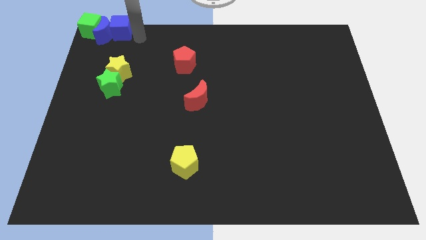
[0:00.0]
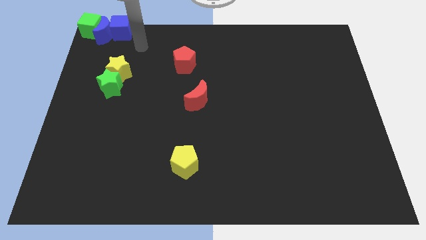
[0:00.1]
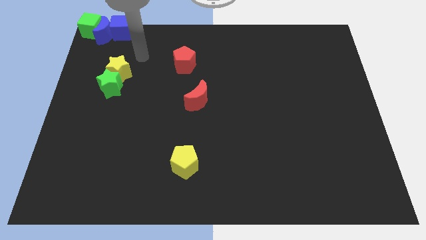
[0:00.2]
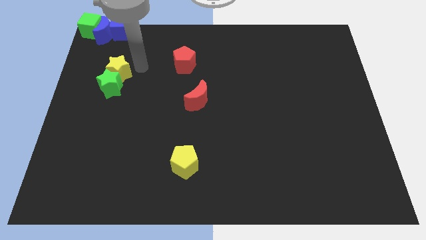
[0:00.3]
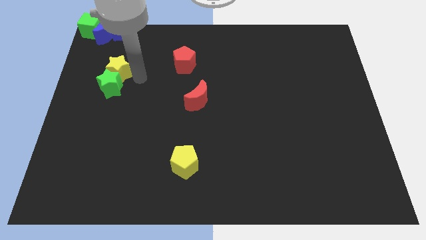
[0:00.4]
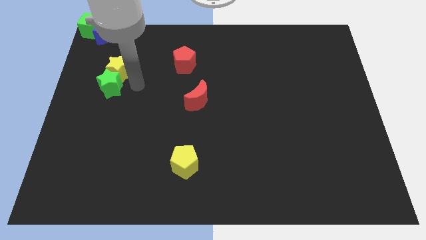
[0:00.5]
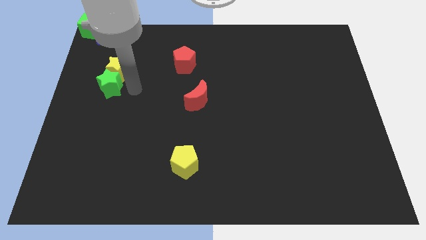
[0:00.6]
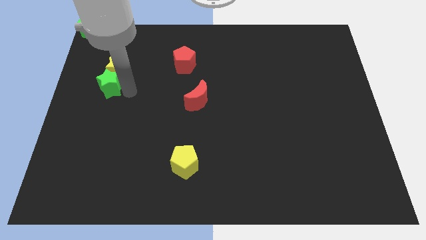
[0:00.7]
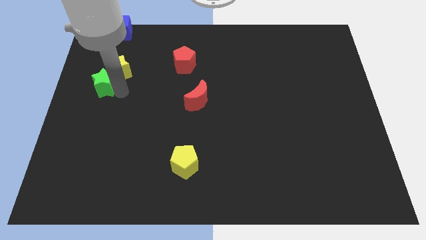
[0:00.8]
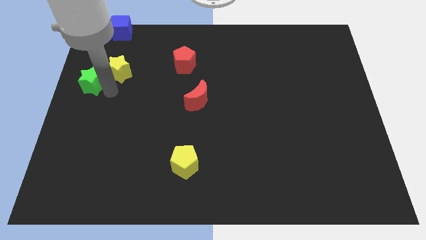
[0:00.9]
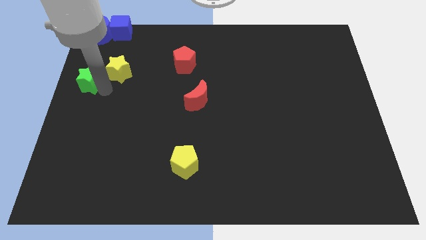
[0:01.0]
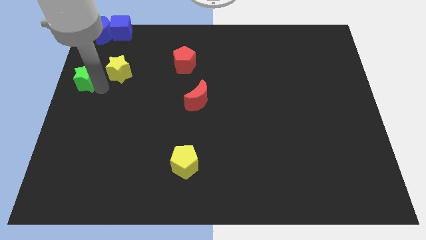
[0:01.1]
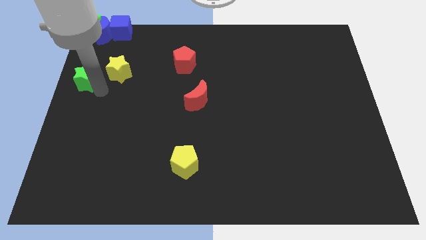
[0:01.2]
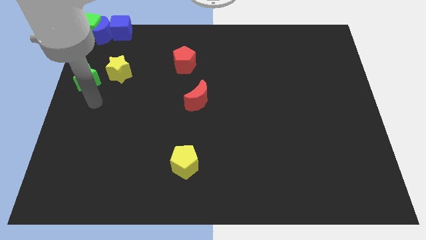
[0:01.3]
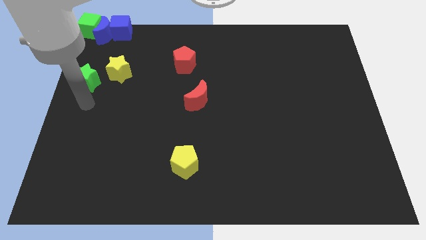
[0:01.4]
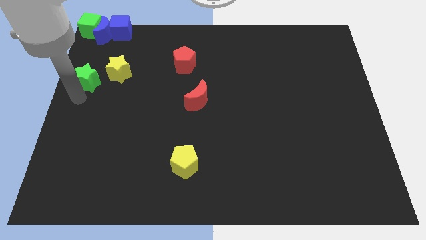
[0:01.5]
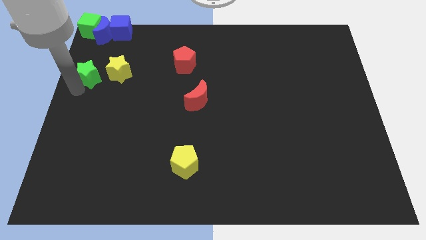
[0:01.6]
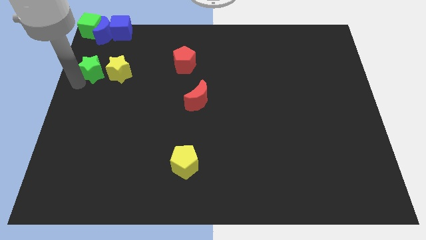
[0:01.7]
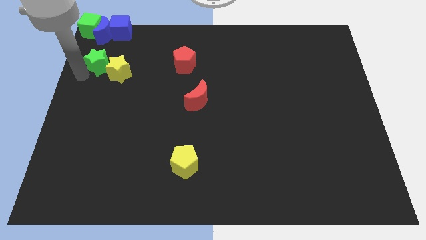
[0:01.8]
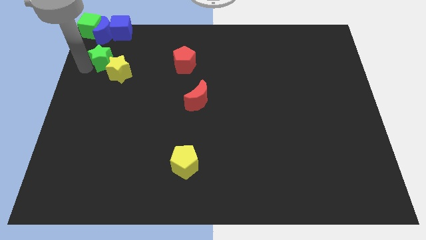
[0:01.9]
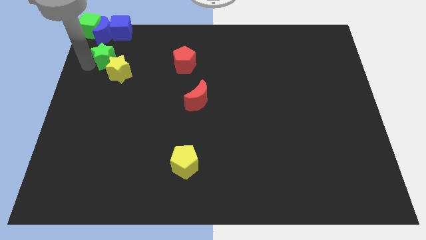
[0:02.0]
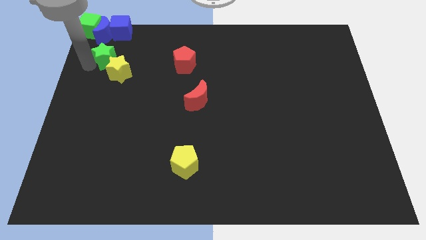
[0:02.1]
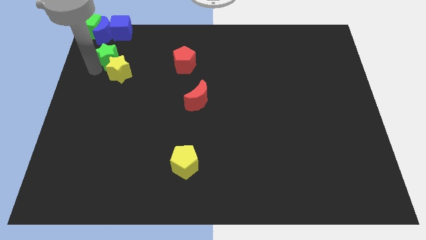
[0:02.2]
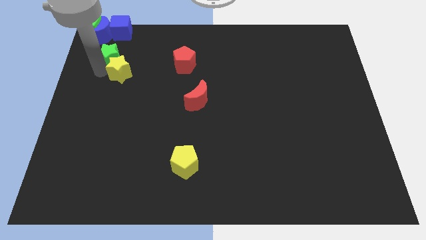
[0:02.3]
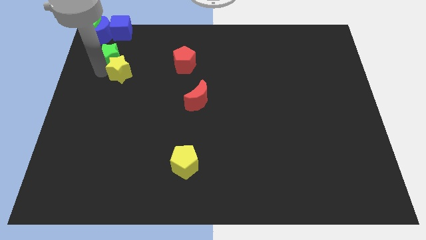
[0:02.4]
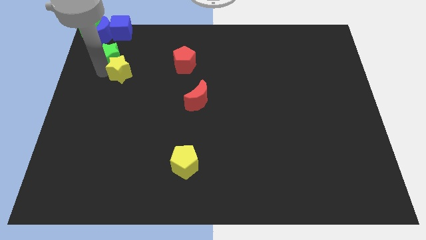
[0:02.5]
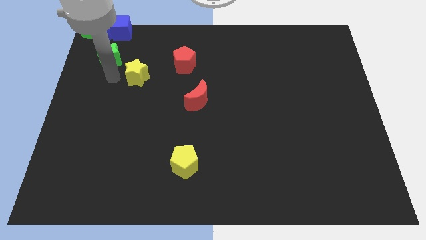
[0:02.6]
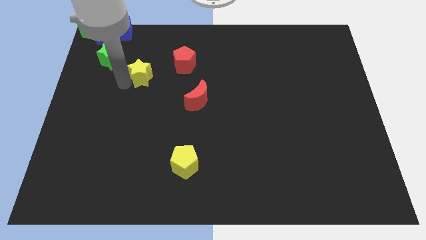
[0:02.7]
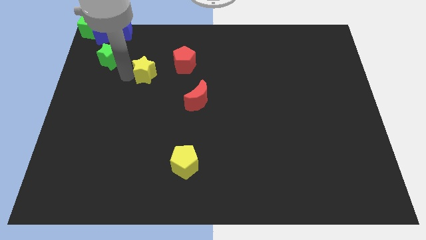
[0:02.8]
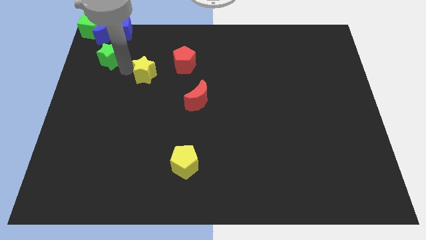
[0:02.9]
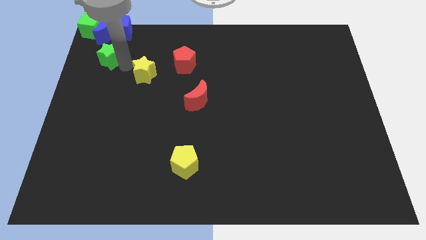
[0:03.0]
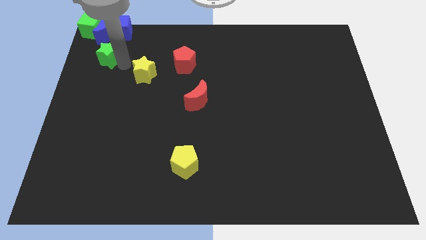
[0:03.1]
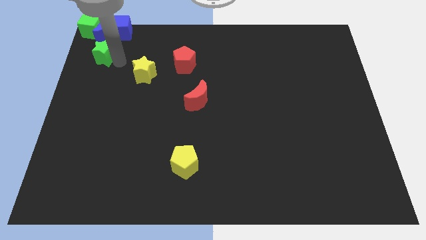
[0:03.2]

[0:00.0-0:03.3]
separate the green star from the yellow star

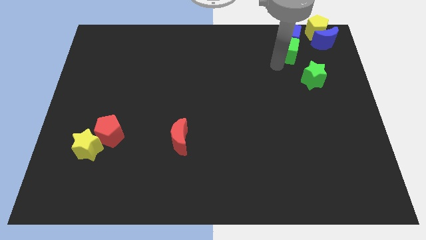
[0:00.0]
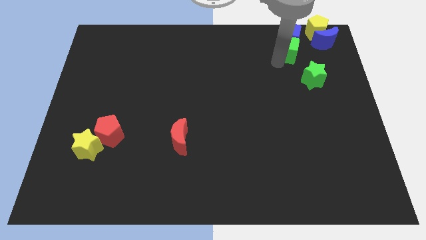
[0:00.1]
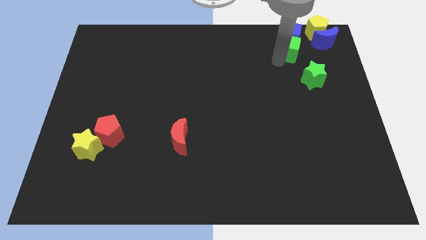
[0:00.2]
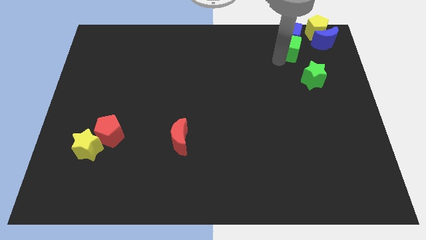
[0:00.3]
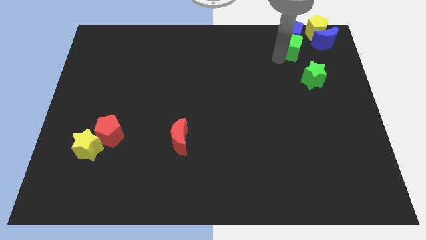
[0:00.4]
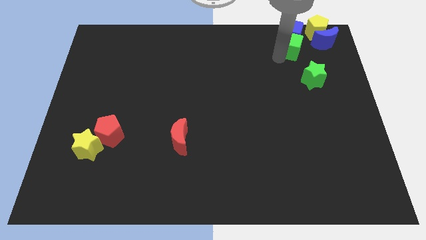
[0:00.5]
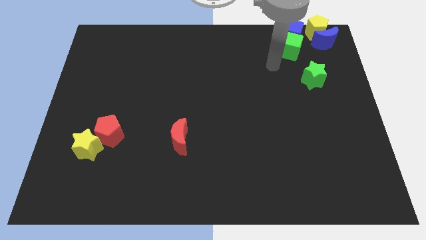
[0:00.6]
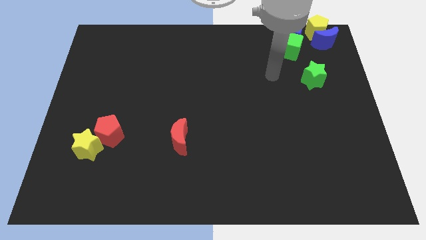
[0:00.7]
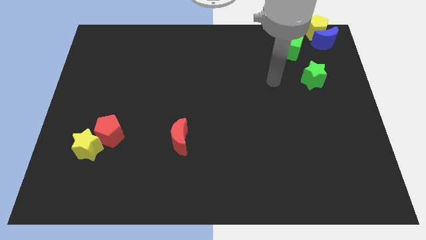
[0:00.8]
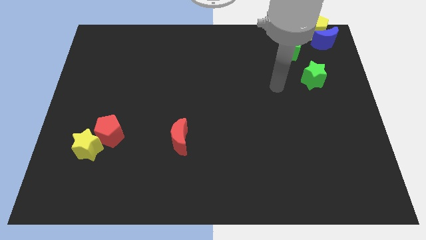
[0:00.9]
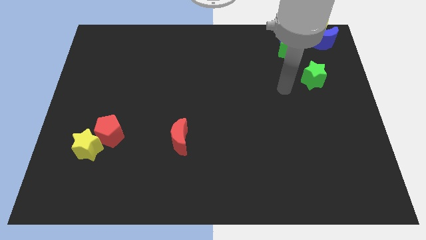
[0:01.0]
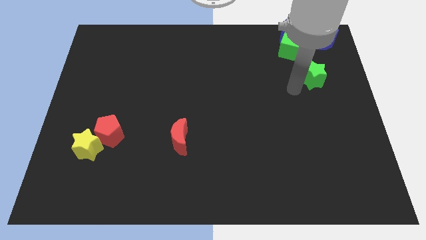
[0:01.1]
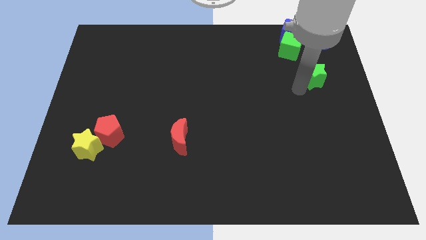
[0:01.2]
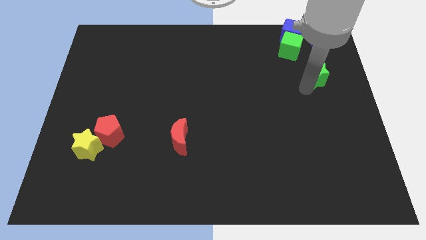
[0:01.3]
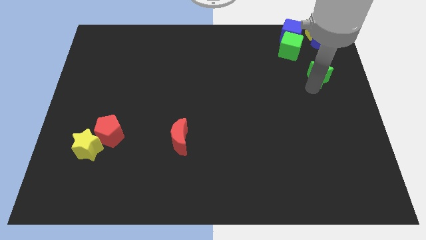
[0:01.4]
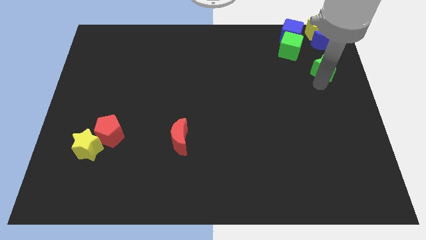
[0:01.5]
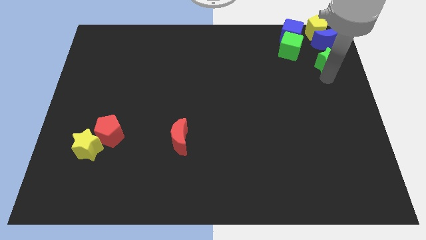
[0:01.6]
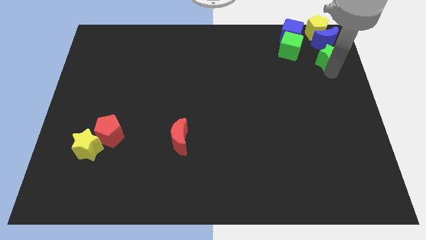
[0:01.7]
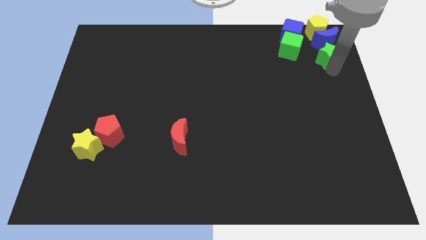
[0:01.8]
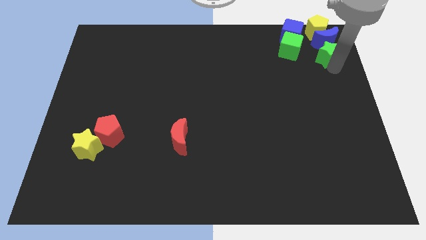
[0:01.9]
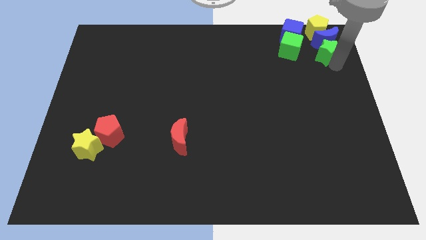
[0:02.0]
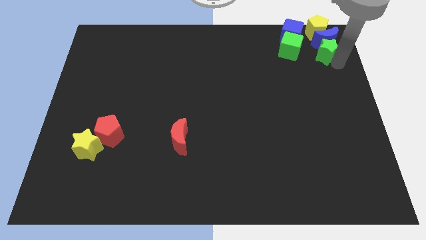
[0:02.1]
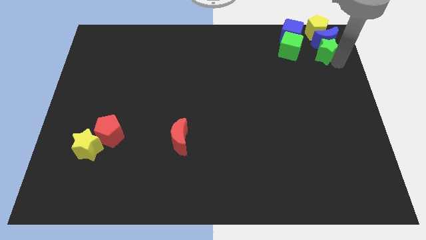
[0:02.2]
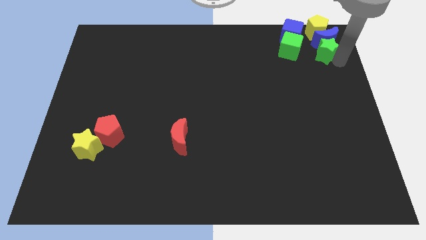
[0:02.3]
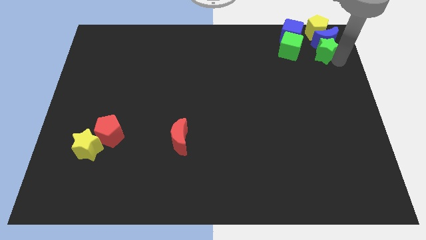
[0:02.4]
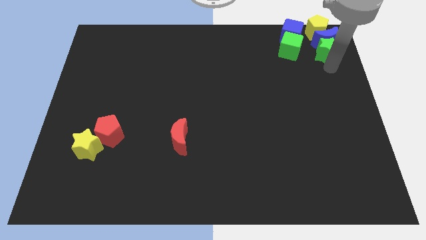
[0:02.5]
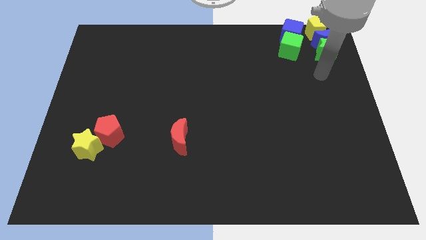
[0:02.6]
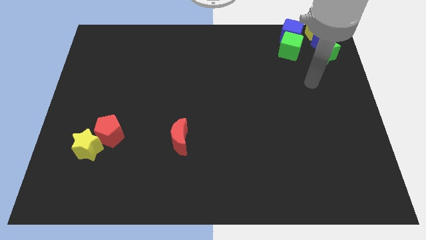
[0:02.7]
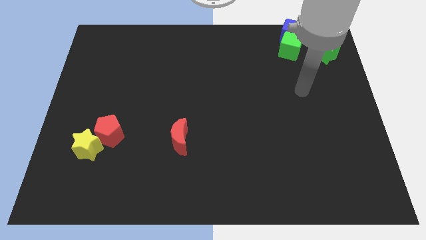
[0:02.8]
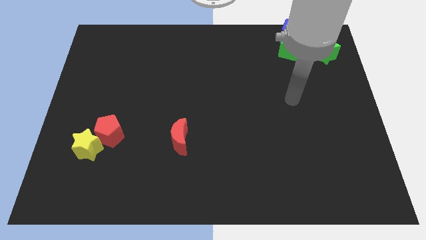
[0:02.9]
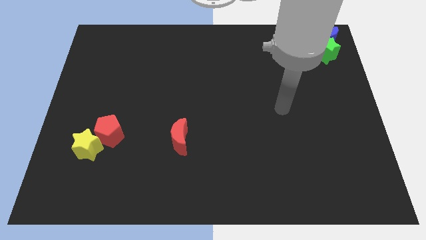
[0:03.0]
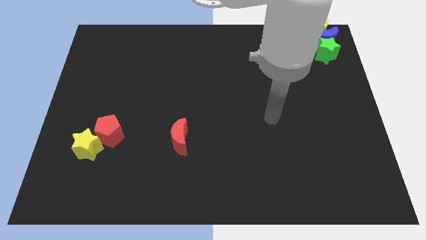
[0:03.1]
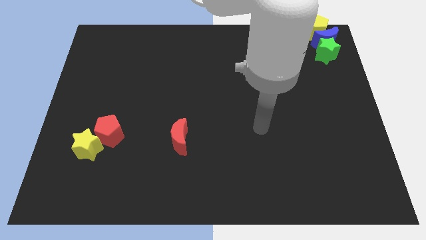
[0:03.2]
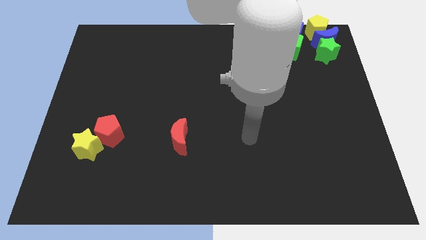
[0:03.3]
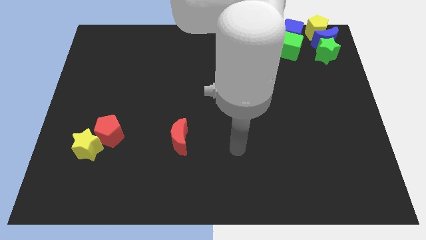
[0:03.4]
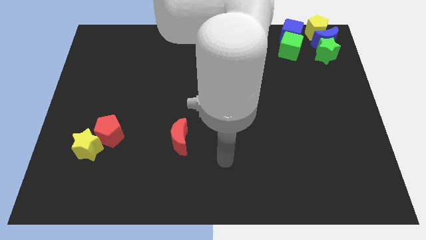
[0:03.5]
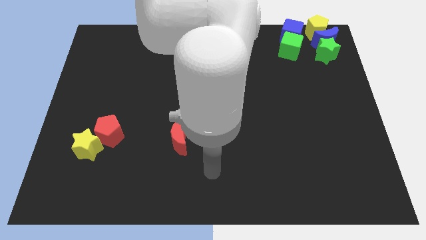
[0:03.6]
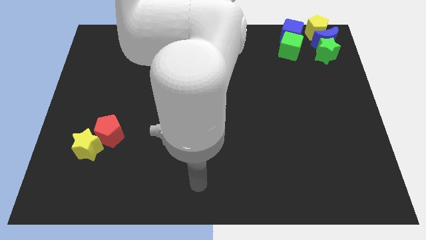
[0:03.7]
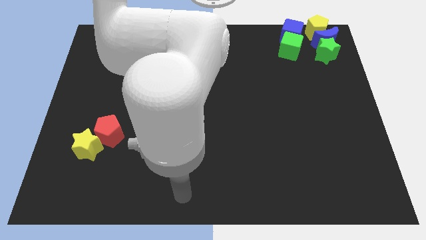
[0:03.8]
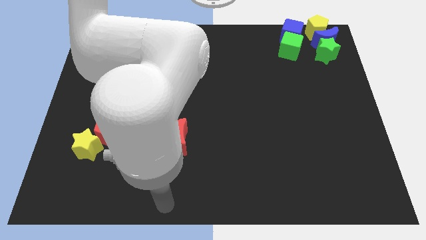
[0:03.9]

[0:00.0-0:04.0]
push the green star to the bottom of the blue crescent

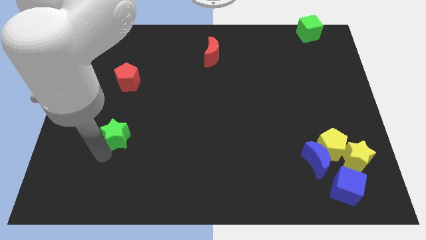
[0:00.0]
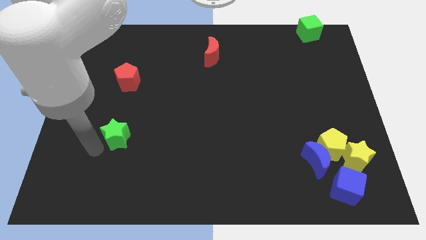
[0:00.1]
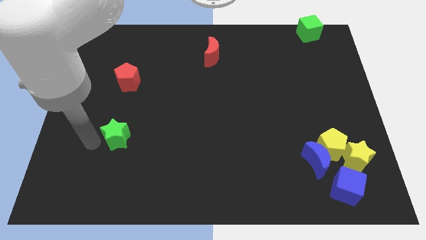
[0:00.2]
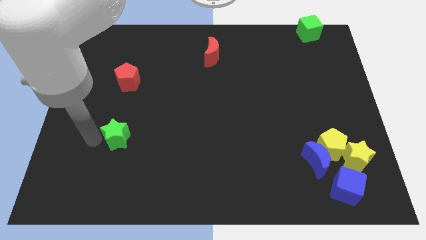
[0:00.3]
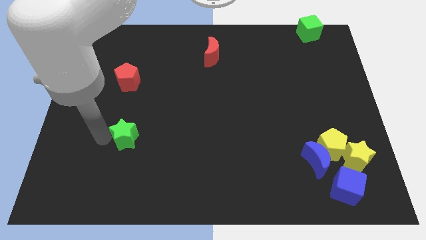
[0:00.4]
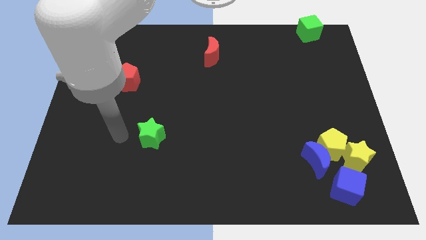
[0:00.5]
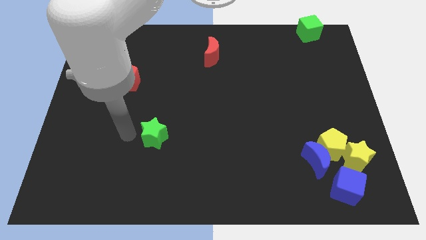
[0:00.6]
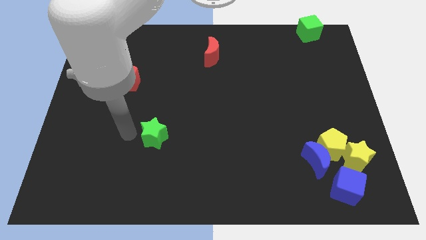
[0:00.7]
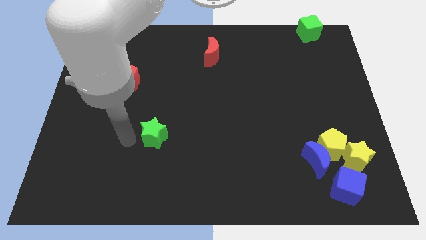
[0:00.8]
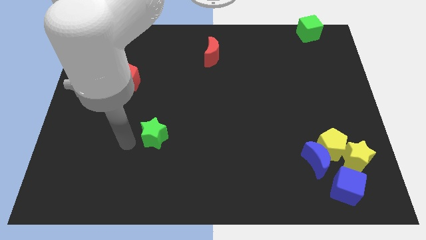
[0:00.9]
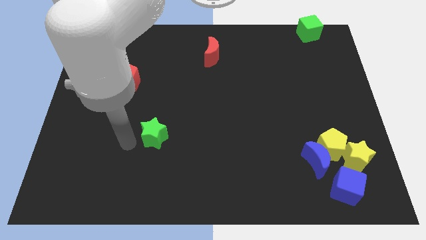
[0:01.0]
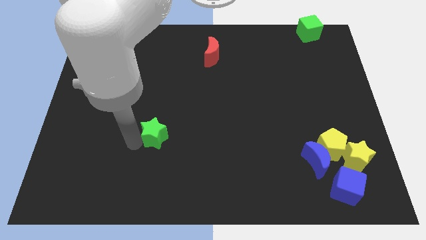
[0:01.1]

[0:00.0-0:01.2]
slide the green star slightly to the right

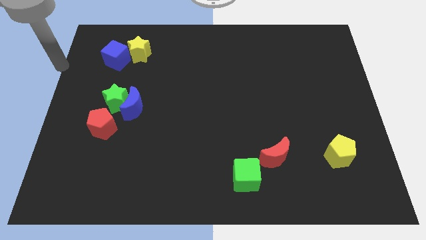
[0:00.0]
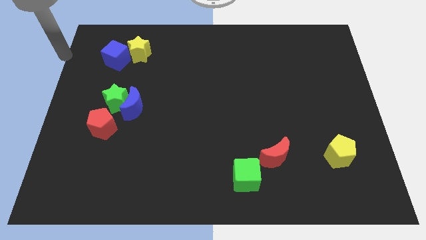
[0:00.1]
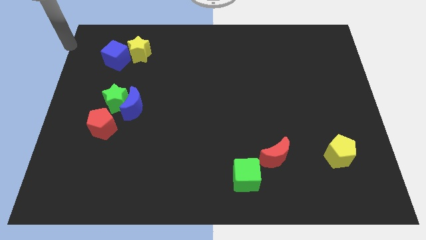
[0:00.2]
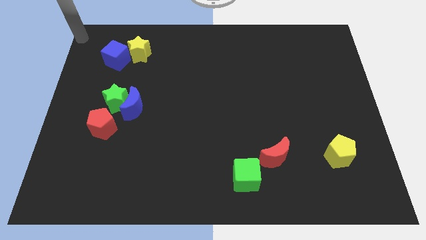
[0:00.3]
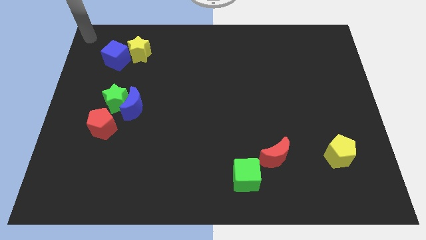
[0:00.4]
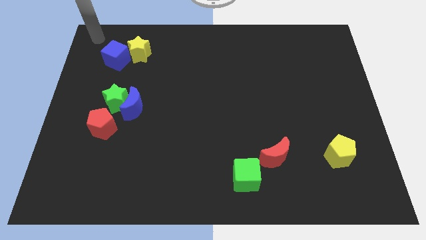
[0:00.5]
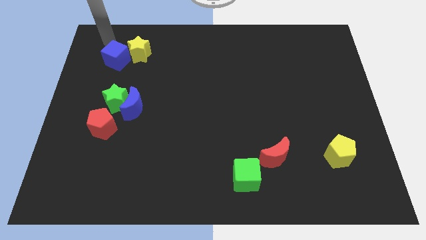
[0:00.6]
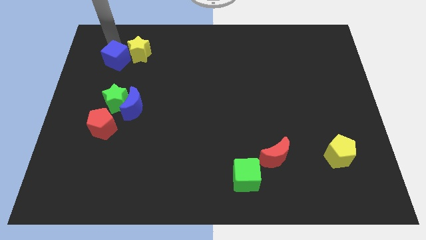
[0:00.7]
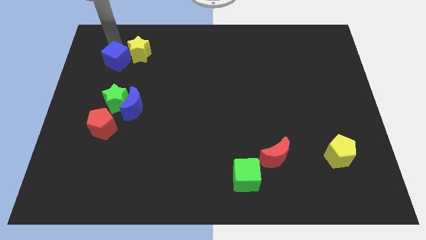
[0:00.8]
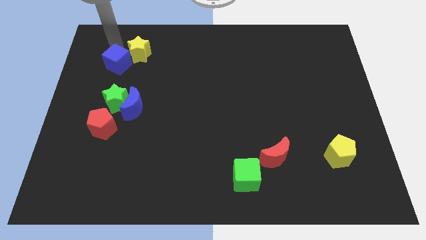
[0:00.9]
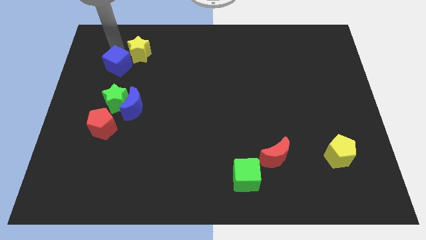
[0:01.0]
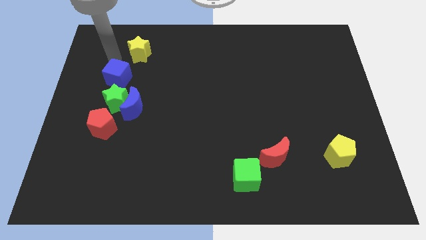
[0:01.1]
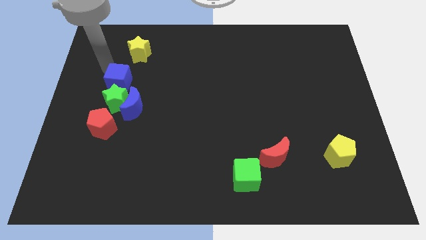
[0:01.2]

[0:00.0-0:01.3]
separate blue cube from yellow star
